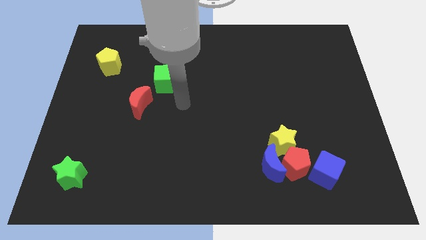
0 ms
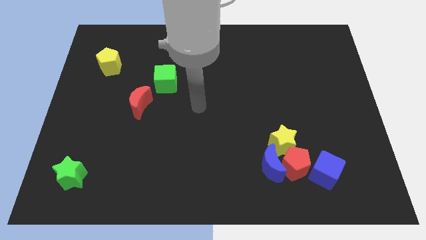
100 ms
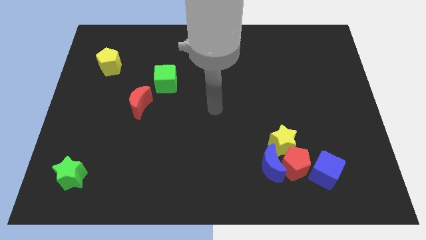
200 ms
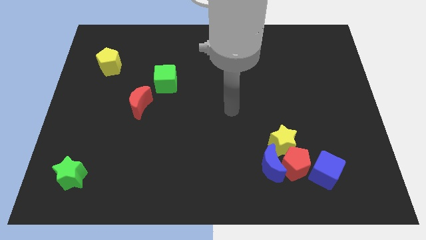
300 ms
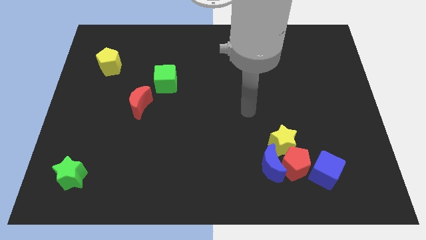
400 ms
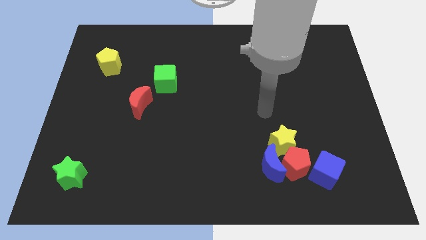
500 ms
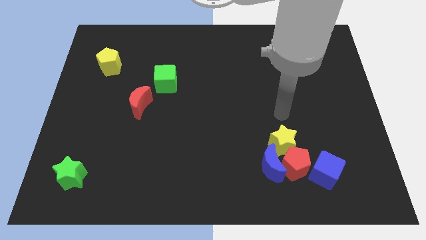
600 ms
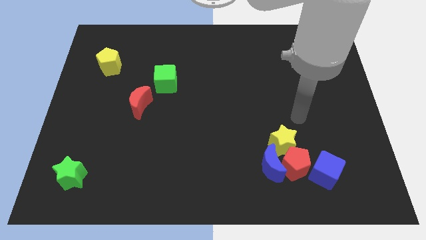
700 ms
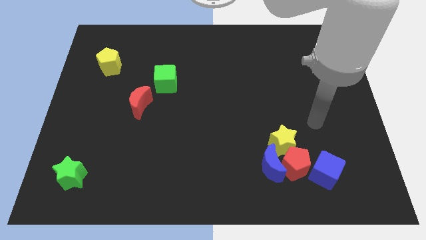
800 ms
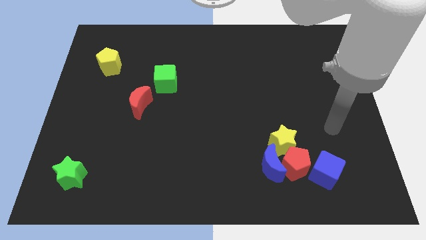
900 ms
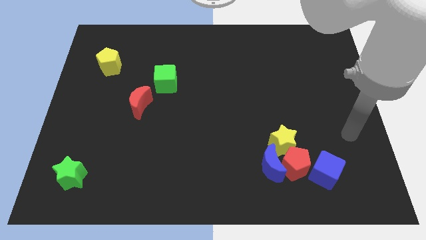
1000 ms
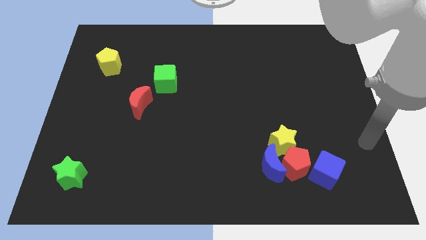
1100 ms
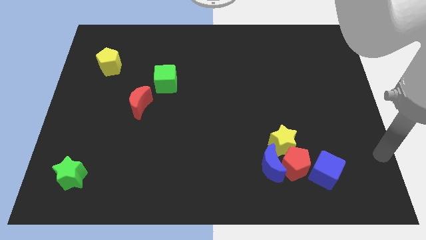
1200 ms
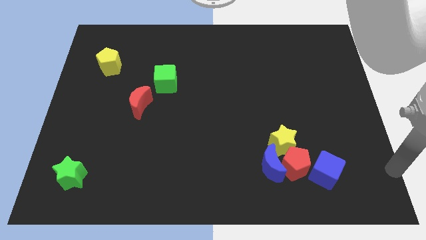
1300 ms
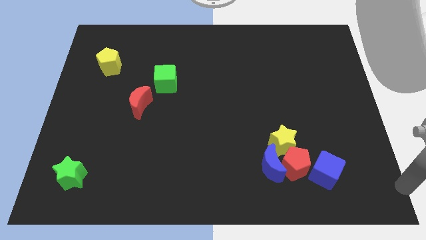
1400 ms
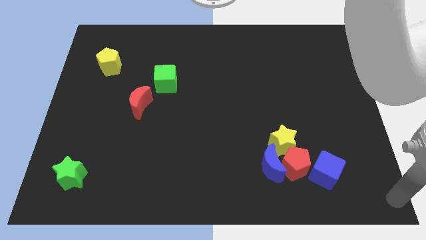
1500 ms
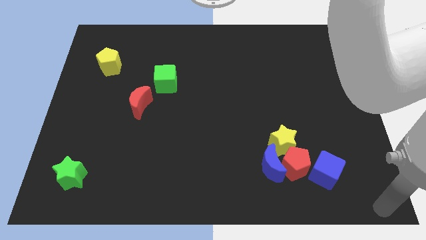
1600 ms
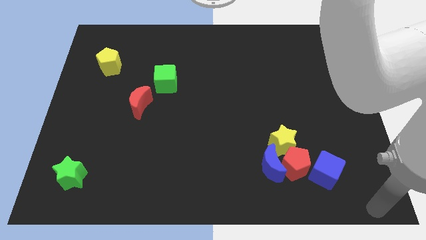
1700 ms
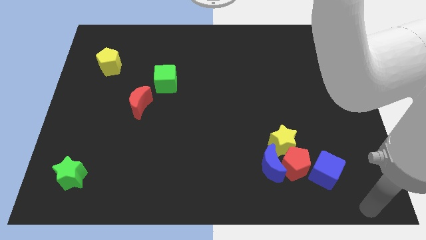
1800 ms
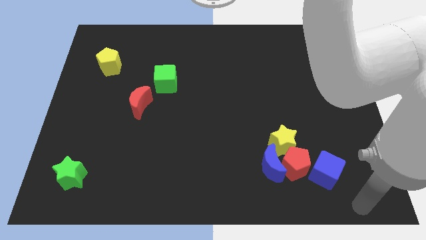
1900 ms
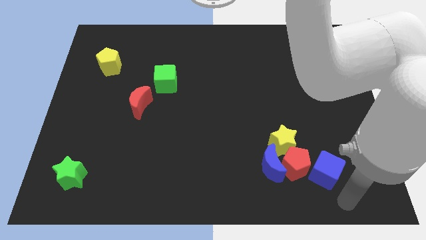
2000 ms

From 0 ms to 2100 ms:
move your arm to the bottom of the blue cube

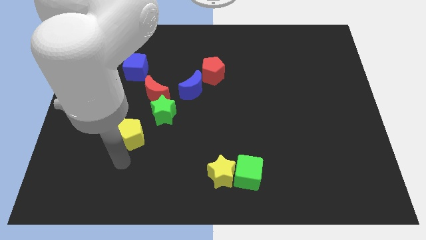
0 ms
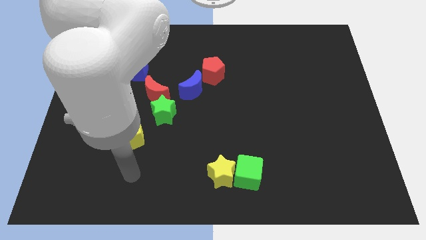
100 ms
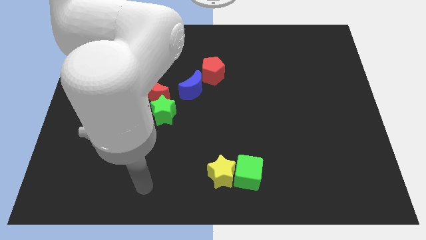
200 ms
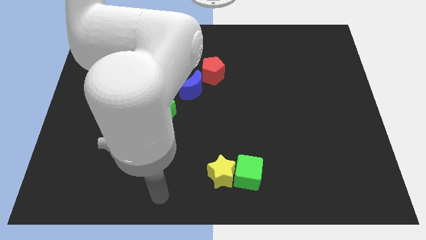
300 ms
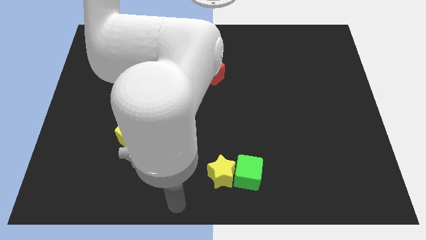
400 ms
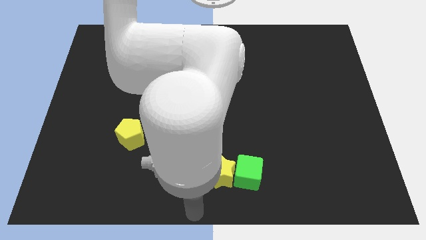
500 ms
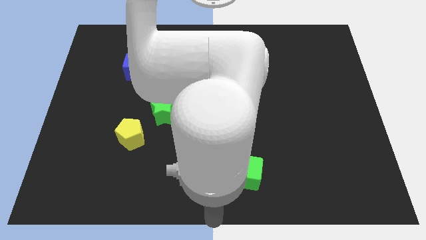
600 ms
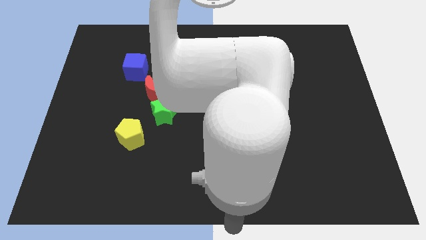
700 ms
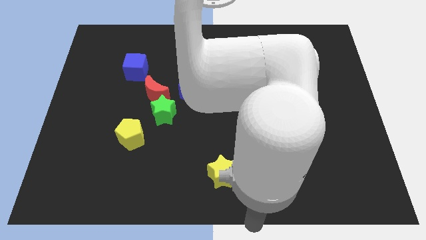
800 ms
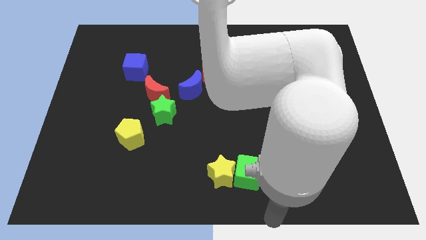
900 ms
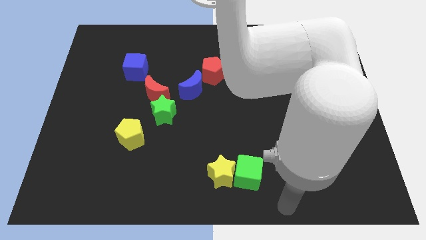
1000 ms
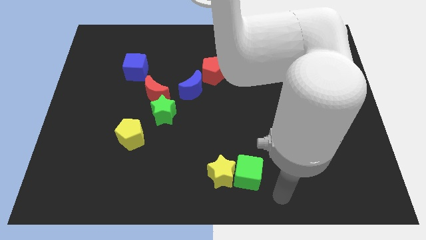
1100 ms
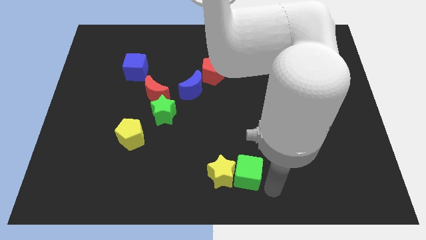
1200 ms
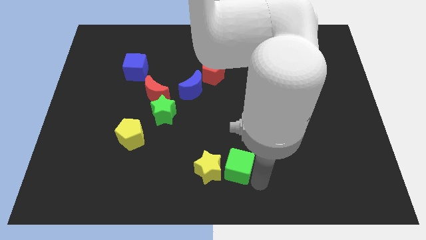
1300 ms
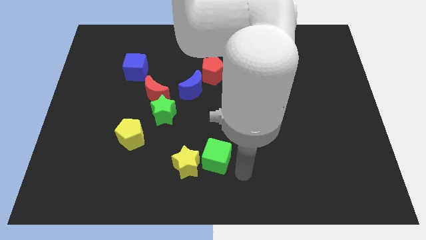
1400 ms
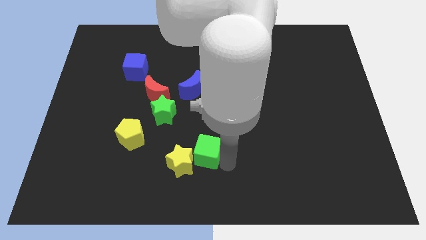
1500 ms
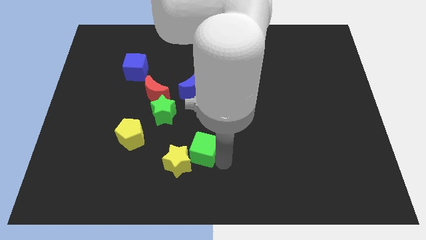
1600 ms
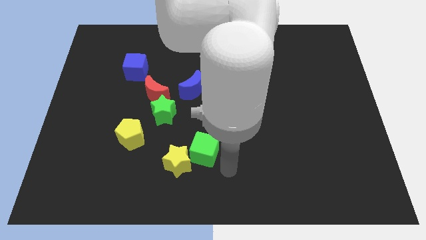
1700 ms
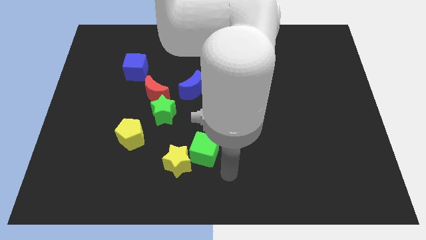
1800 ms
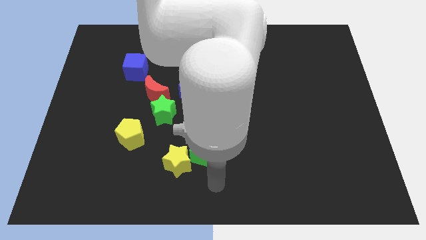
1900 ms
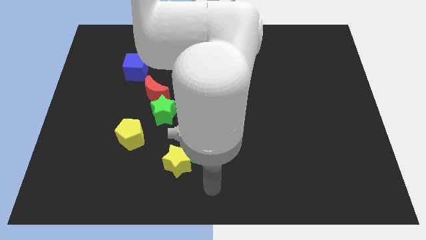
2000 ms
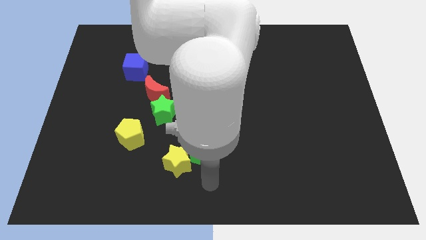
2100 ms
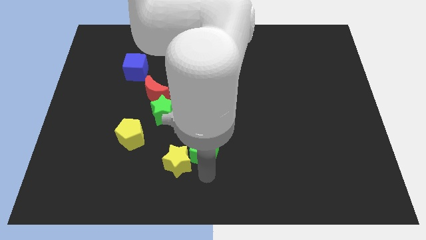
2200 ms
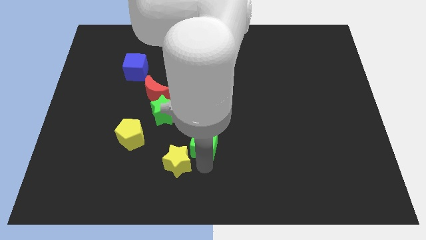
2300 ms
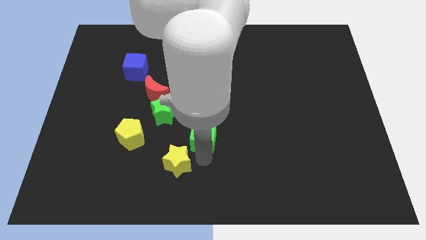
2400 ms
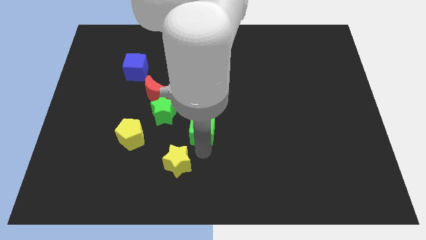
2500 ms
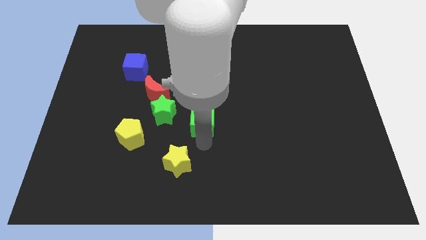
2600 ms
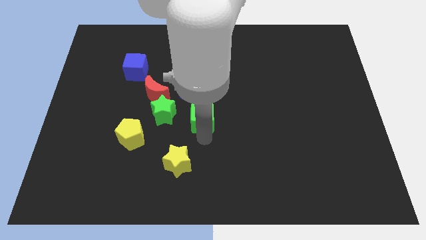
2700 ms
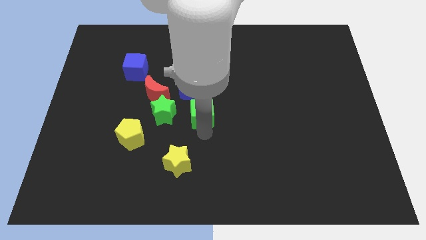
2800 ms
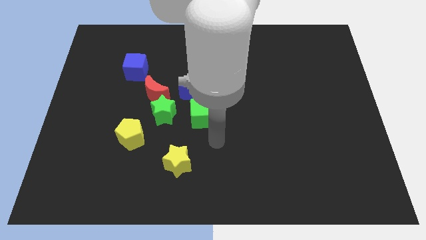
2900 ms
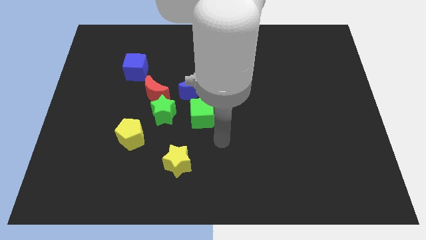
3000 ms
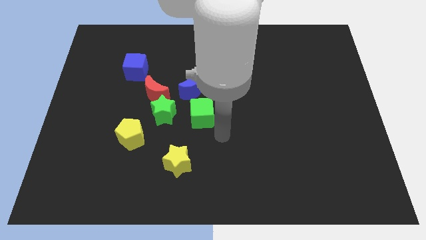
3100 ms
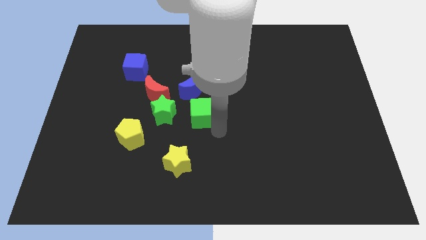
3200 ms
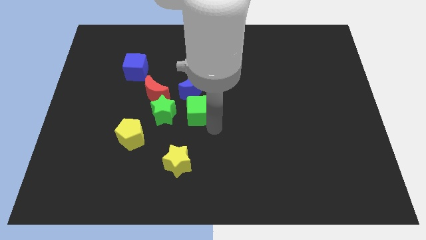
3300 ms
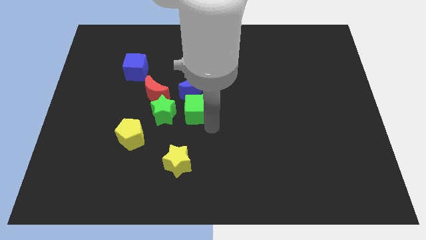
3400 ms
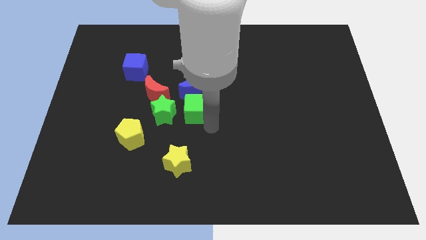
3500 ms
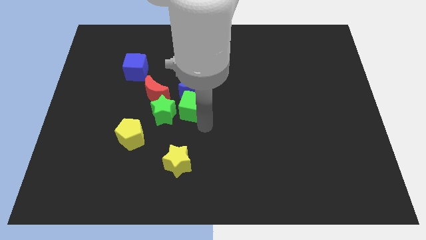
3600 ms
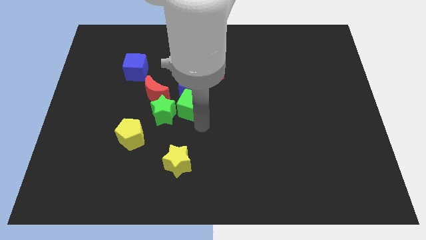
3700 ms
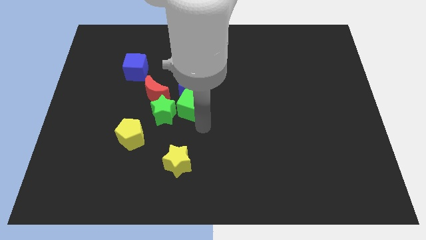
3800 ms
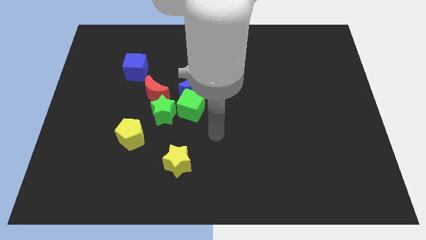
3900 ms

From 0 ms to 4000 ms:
place the green cube horizontally at the right side of the green star

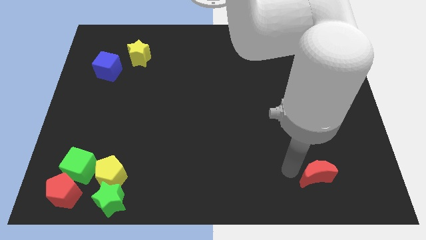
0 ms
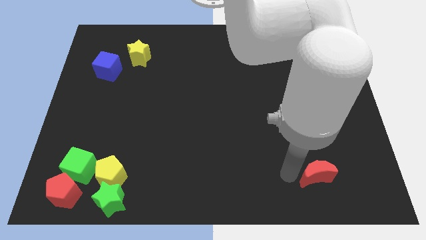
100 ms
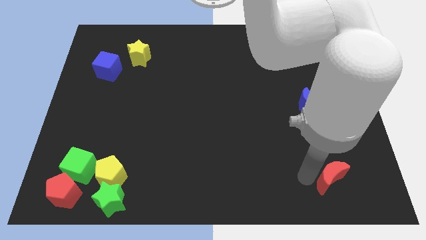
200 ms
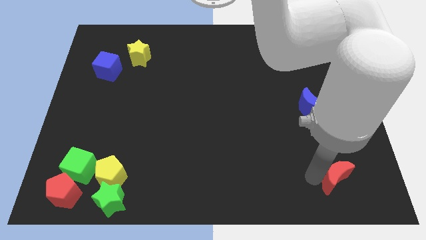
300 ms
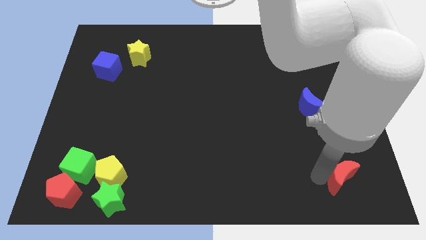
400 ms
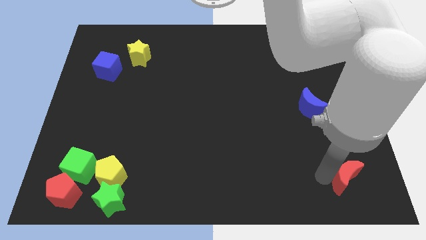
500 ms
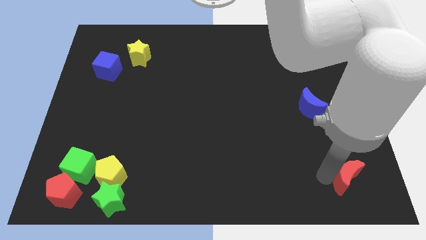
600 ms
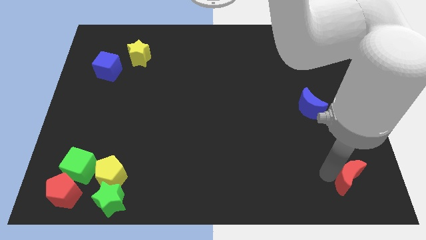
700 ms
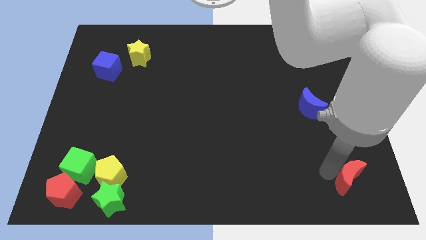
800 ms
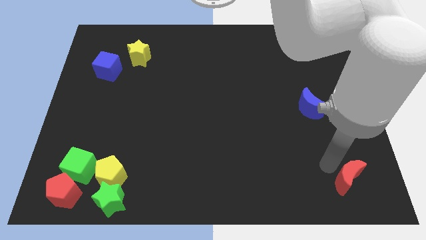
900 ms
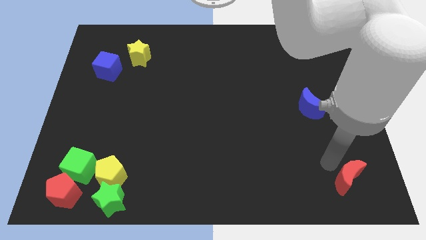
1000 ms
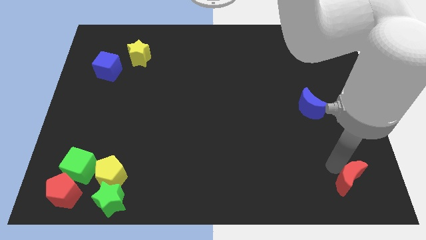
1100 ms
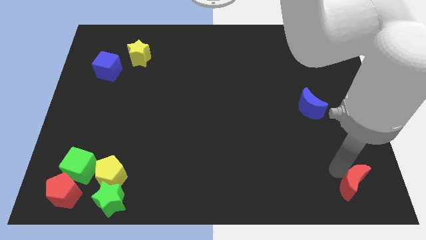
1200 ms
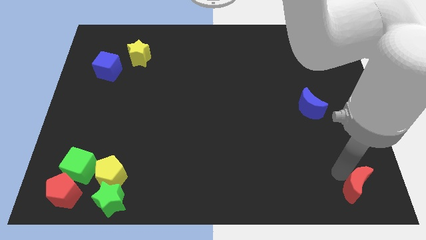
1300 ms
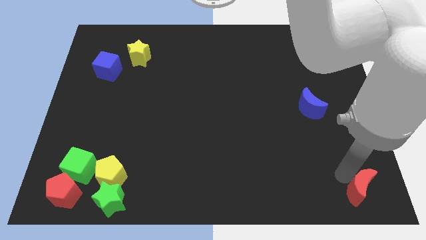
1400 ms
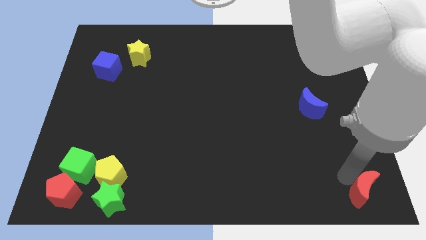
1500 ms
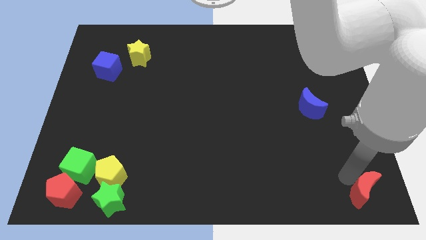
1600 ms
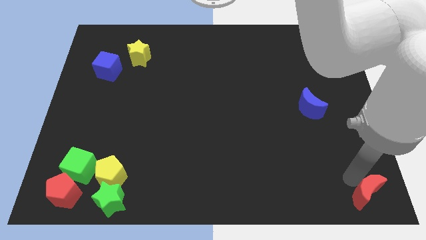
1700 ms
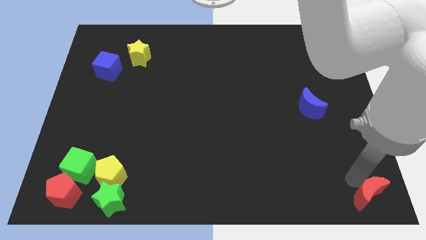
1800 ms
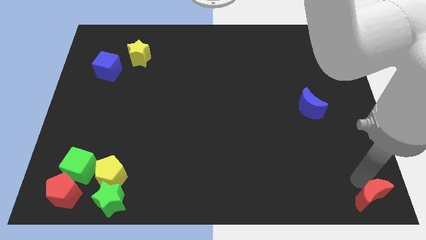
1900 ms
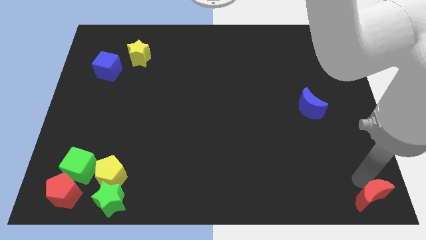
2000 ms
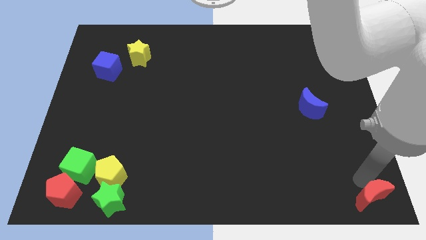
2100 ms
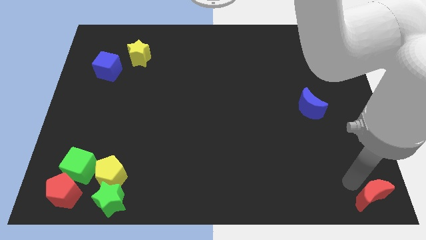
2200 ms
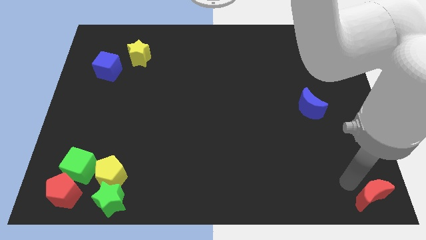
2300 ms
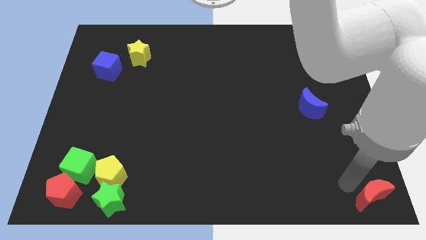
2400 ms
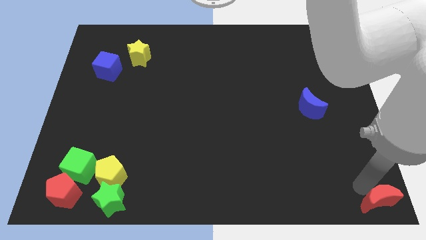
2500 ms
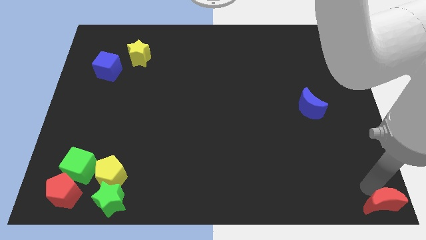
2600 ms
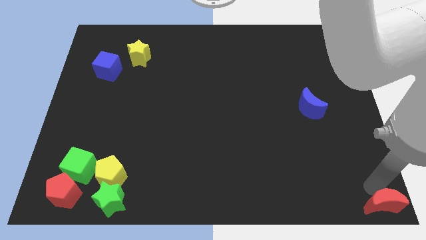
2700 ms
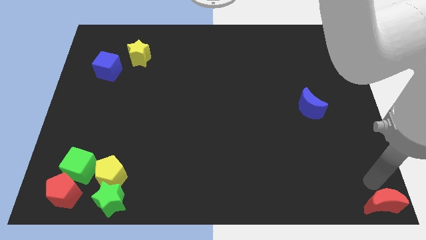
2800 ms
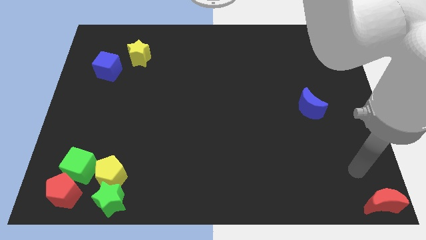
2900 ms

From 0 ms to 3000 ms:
push the red crescent to the bottom right corner of the board
